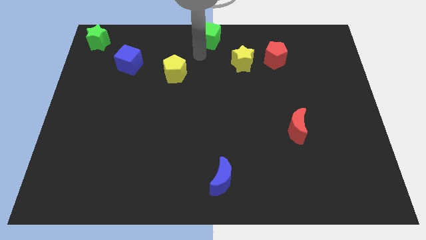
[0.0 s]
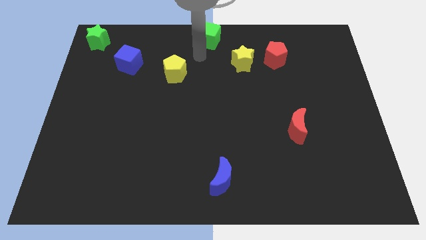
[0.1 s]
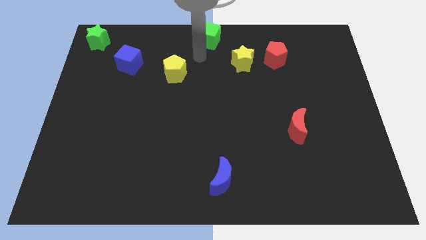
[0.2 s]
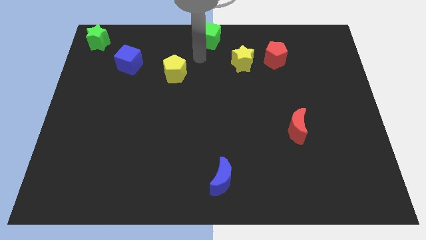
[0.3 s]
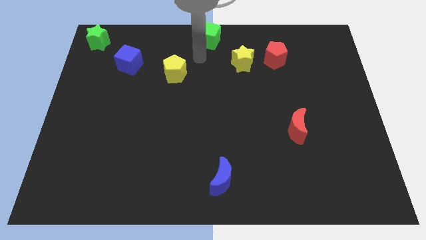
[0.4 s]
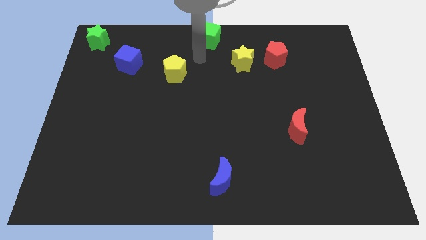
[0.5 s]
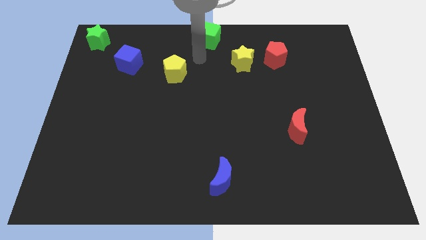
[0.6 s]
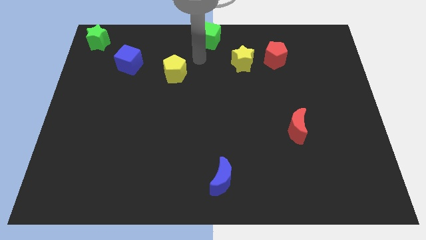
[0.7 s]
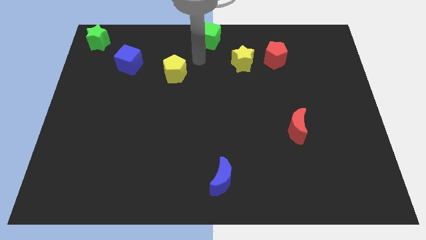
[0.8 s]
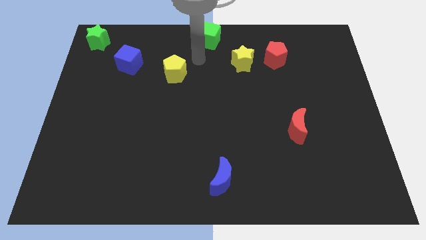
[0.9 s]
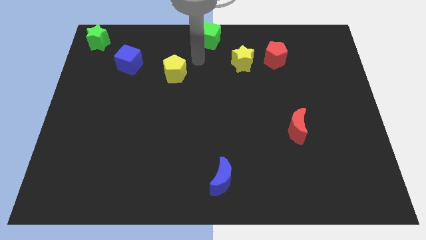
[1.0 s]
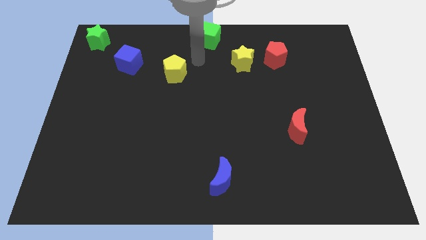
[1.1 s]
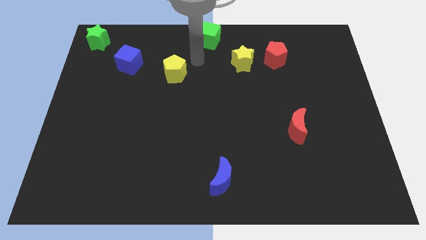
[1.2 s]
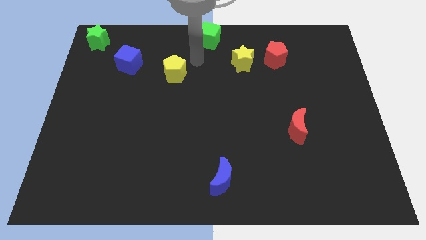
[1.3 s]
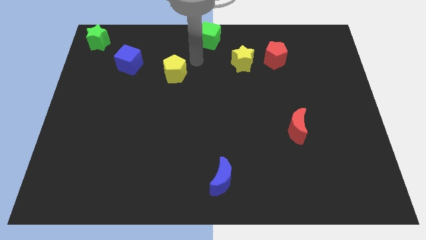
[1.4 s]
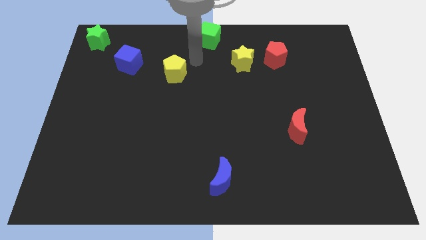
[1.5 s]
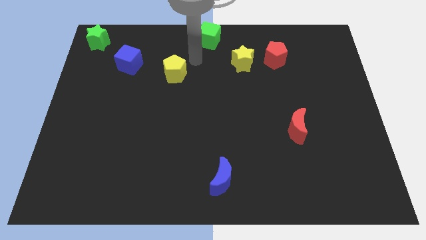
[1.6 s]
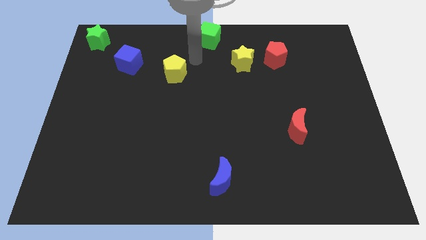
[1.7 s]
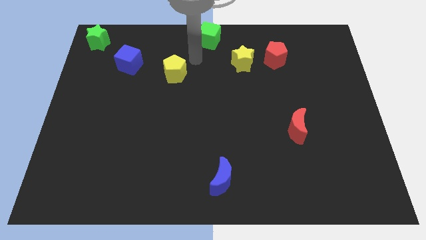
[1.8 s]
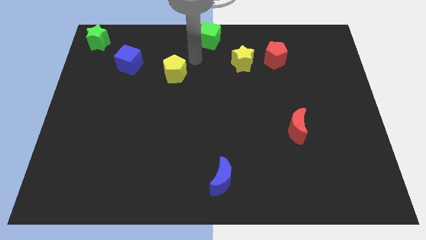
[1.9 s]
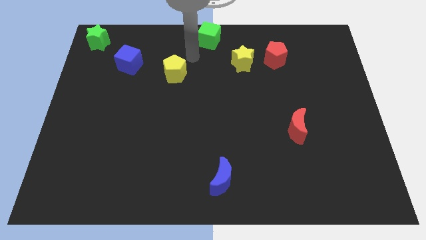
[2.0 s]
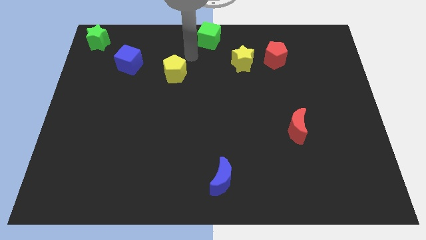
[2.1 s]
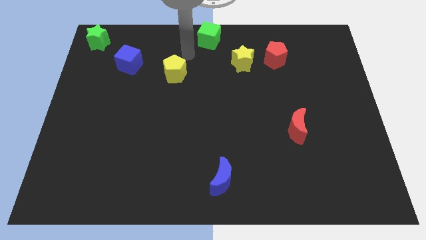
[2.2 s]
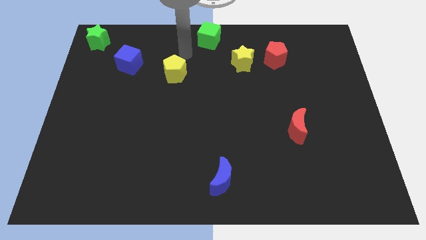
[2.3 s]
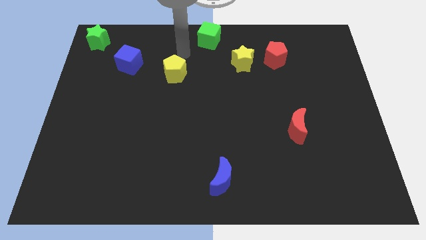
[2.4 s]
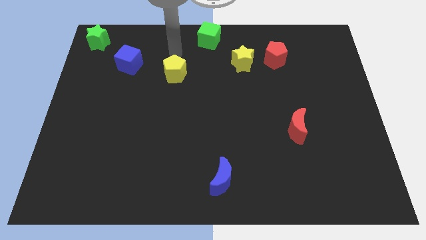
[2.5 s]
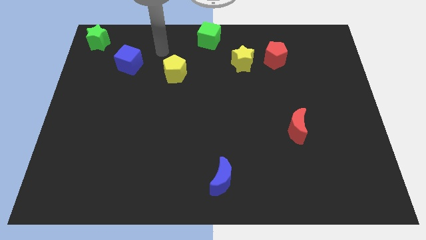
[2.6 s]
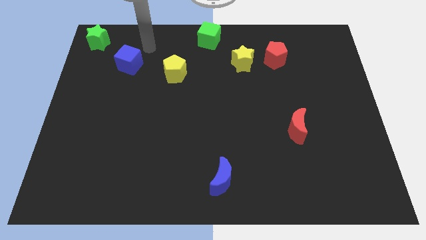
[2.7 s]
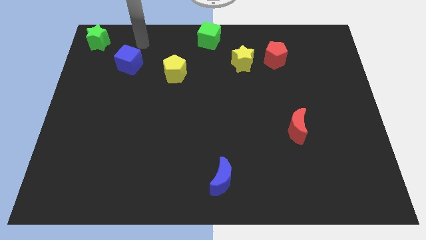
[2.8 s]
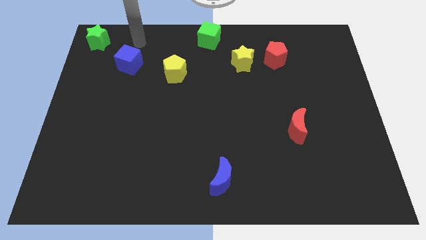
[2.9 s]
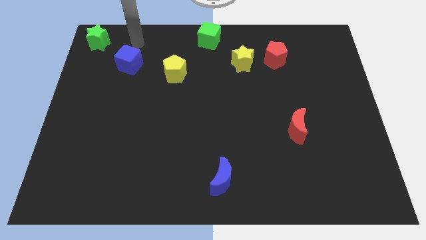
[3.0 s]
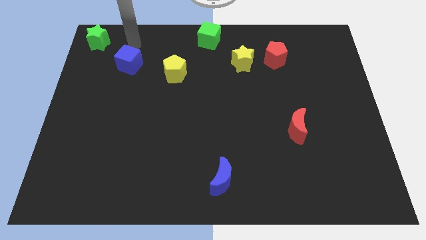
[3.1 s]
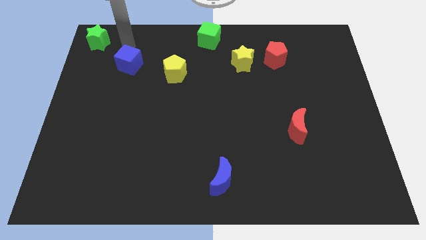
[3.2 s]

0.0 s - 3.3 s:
move away from the green cube

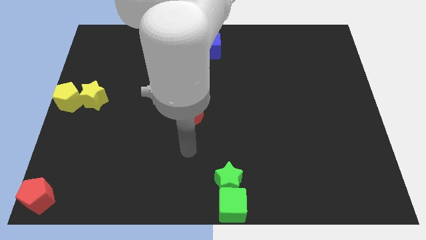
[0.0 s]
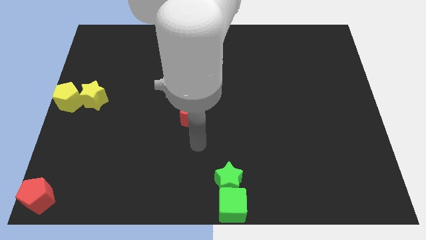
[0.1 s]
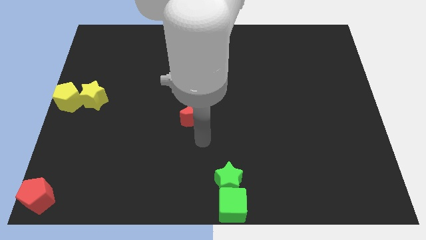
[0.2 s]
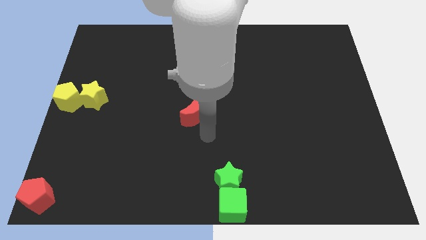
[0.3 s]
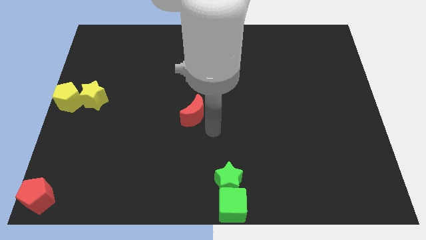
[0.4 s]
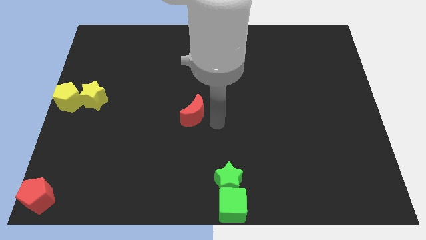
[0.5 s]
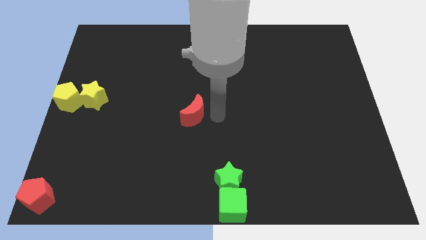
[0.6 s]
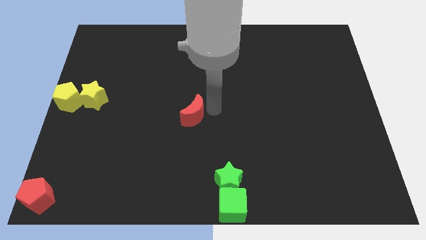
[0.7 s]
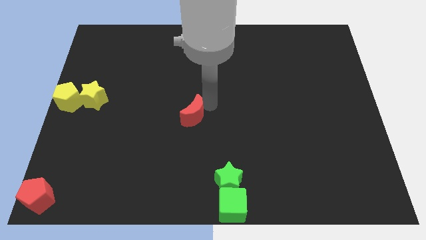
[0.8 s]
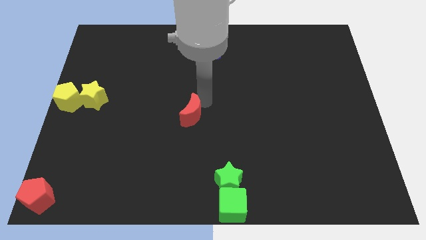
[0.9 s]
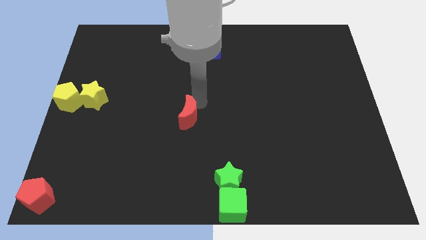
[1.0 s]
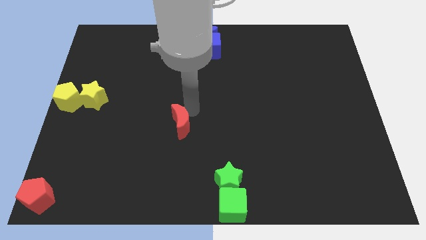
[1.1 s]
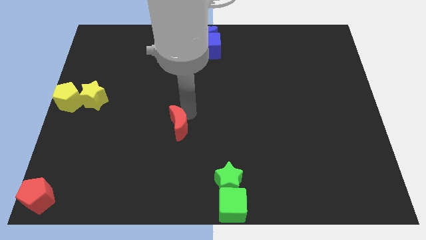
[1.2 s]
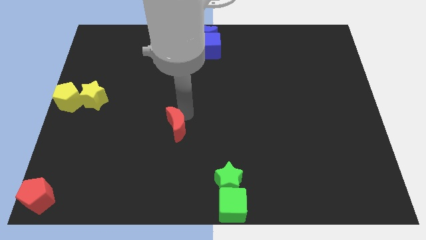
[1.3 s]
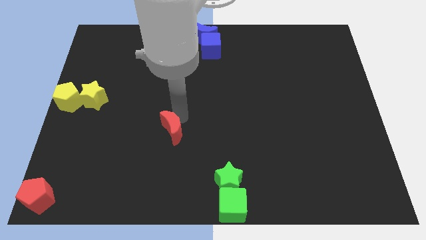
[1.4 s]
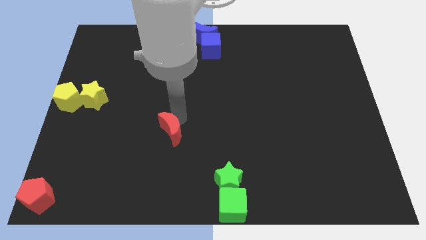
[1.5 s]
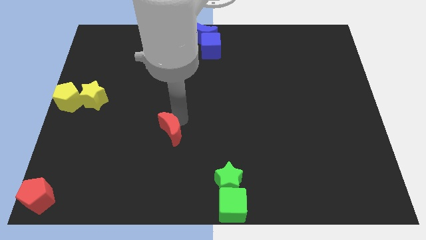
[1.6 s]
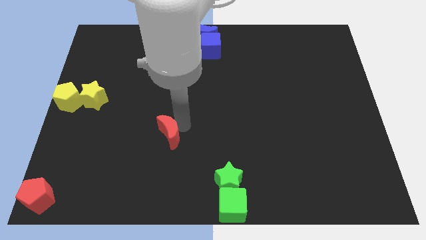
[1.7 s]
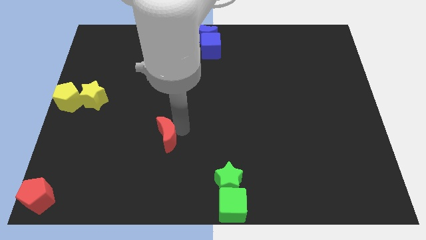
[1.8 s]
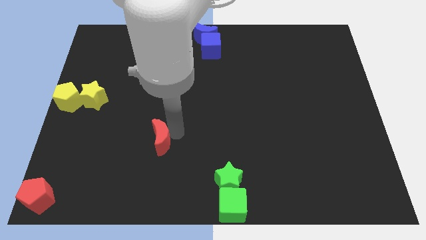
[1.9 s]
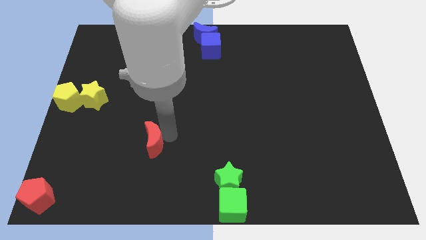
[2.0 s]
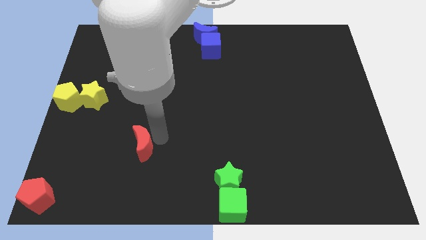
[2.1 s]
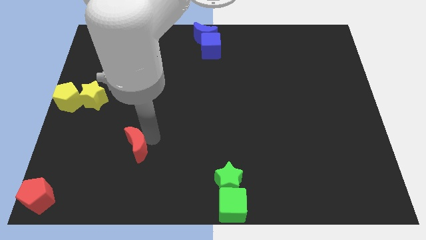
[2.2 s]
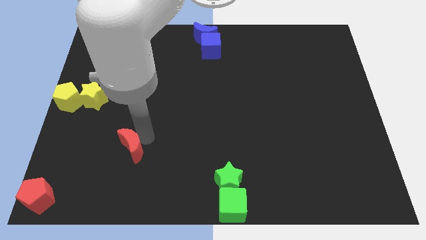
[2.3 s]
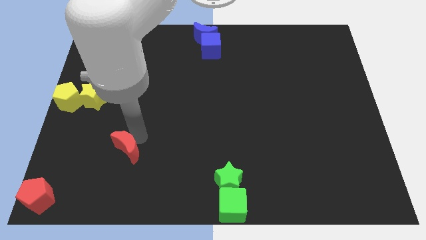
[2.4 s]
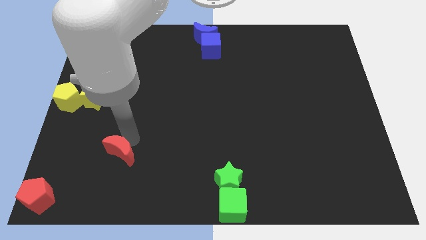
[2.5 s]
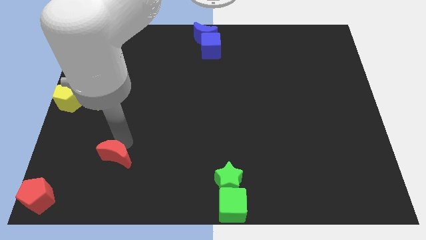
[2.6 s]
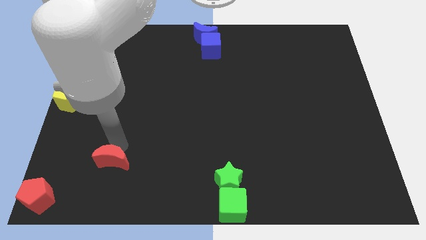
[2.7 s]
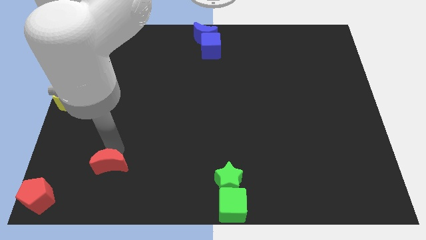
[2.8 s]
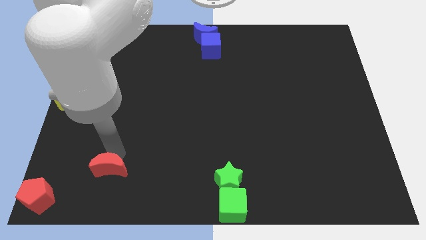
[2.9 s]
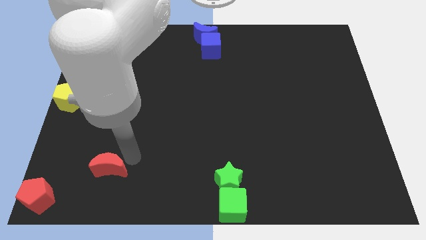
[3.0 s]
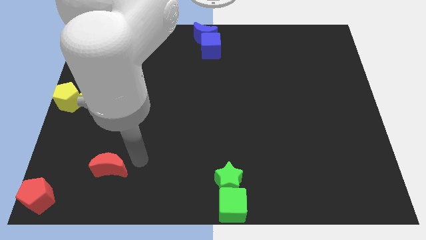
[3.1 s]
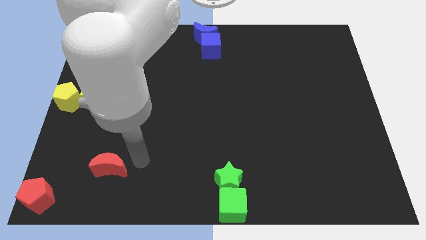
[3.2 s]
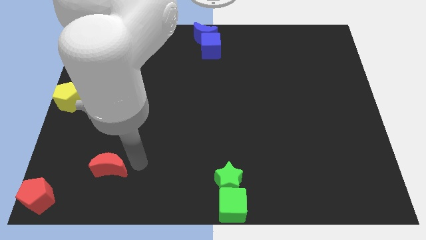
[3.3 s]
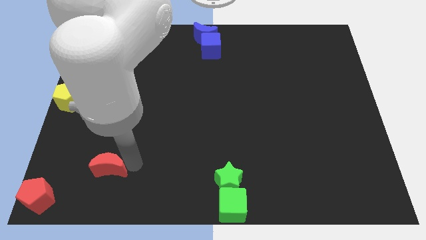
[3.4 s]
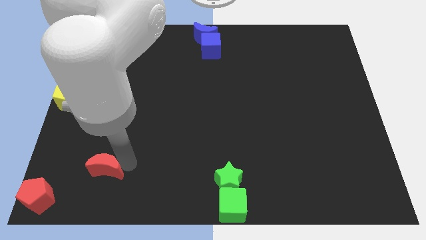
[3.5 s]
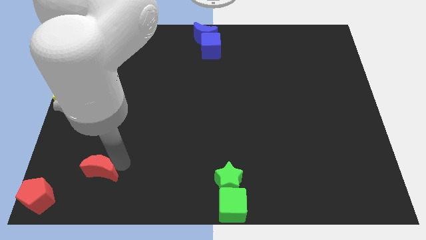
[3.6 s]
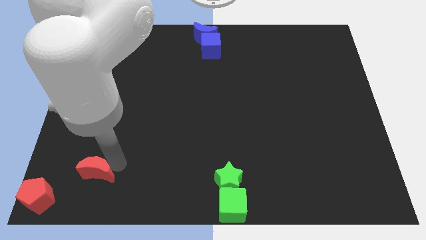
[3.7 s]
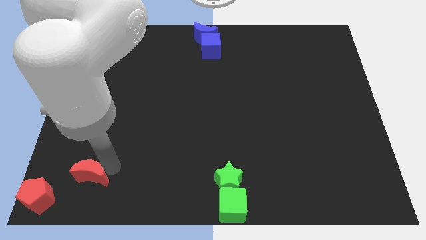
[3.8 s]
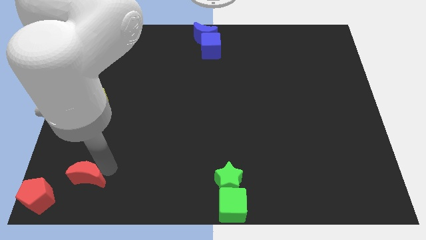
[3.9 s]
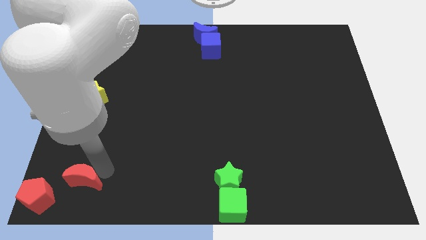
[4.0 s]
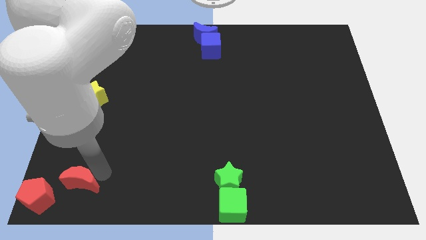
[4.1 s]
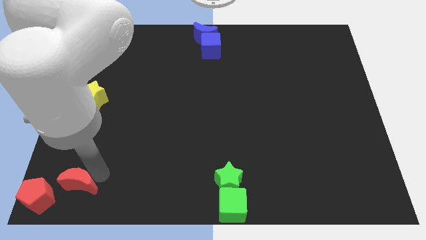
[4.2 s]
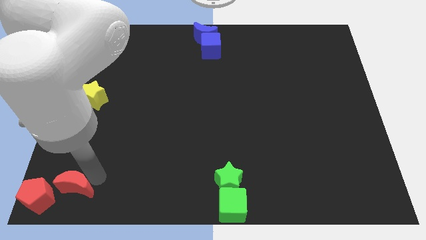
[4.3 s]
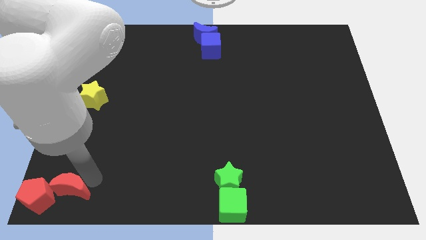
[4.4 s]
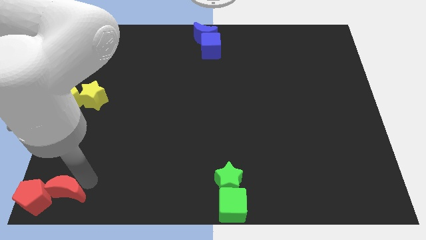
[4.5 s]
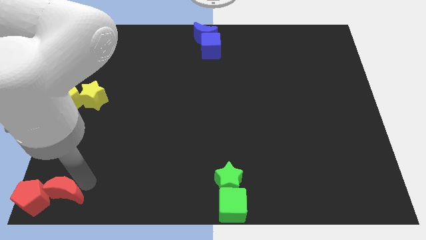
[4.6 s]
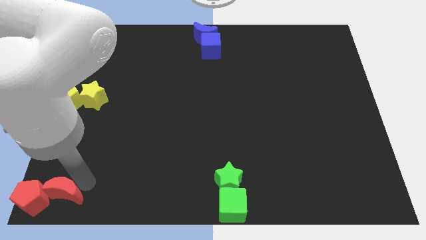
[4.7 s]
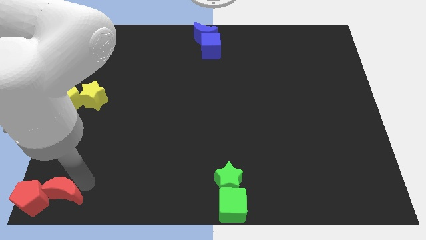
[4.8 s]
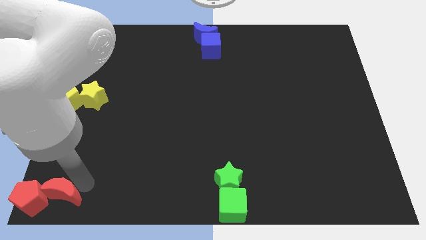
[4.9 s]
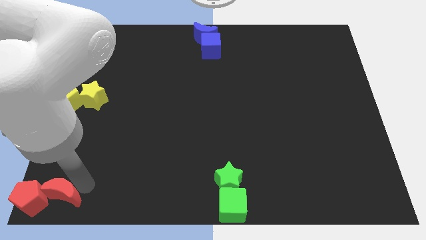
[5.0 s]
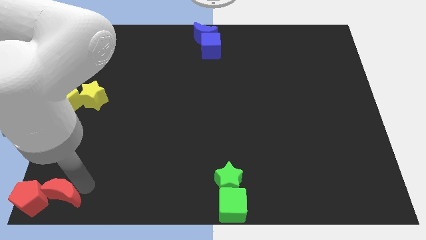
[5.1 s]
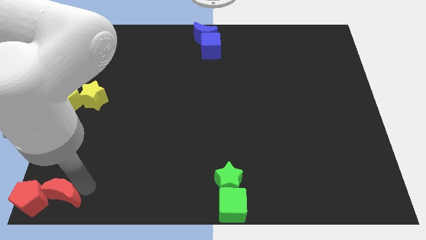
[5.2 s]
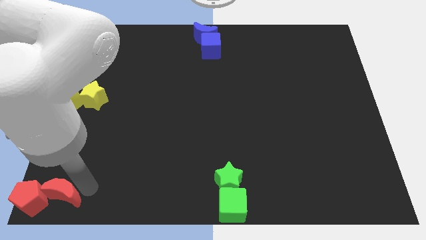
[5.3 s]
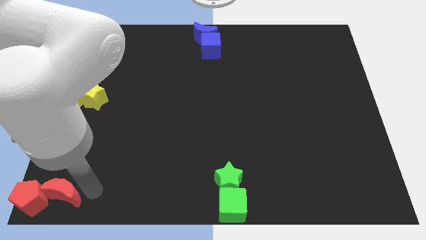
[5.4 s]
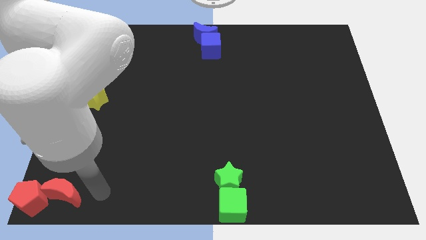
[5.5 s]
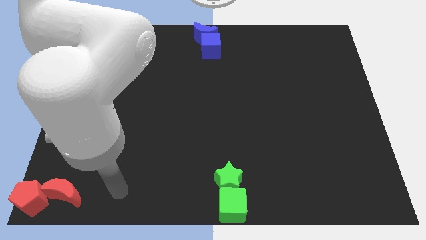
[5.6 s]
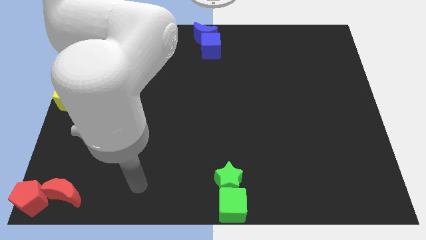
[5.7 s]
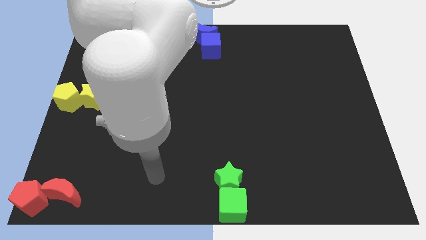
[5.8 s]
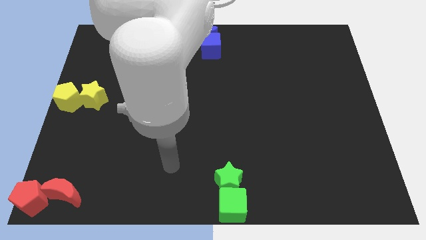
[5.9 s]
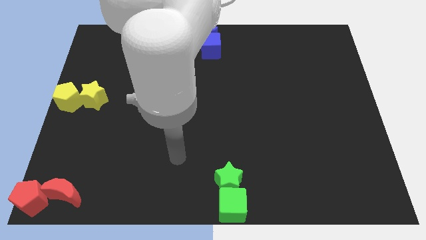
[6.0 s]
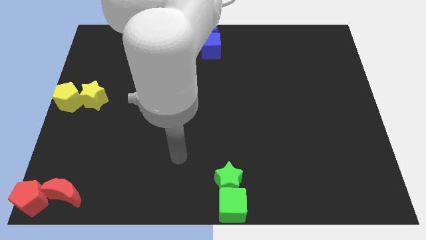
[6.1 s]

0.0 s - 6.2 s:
push the red moon into the red pentagon
